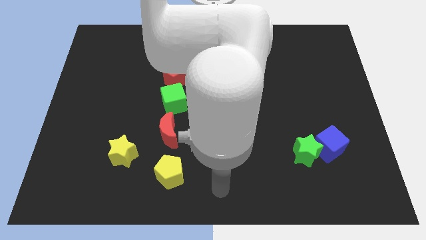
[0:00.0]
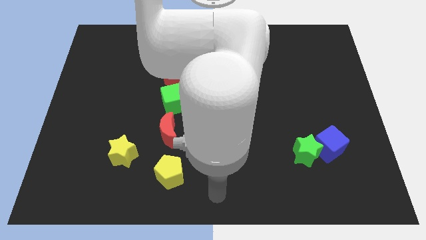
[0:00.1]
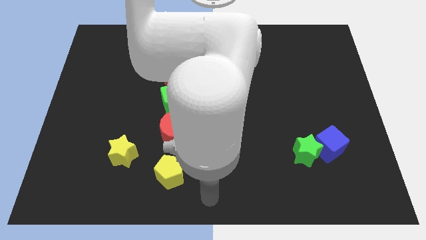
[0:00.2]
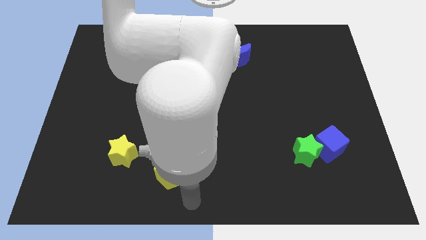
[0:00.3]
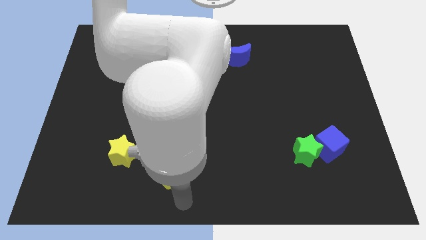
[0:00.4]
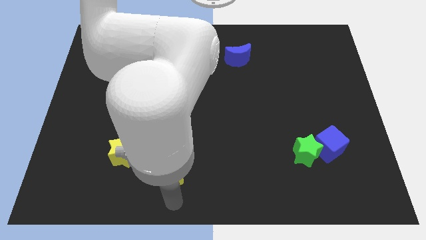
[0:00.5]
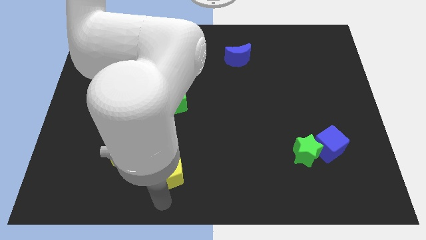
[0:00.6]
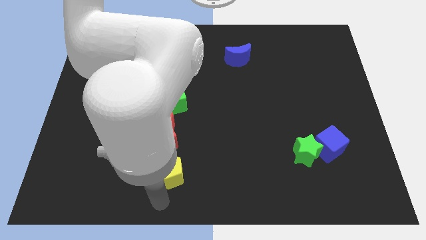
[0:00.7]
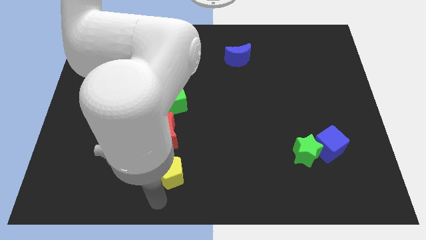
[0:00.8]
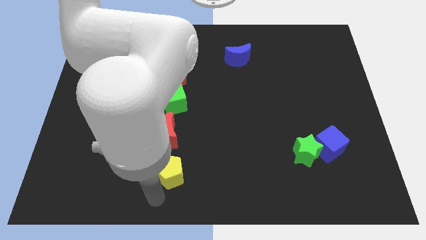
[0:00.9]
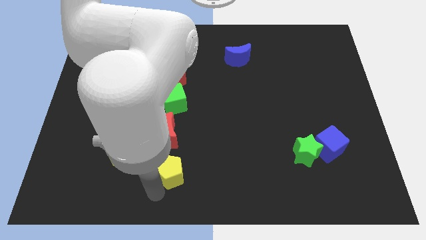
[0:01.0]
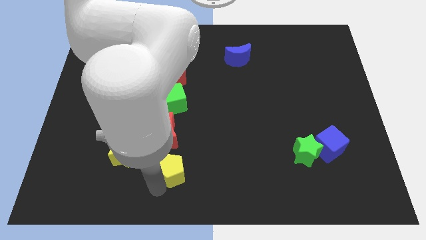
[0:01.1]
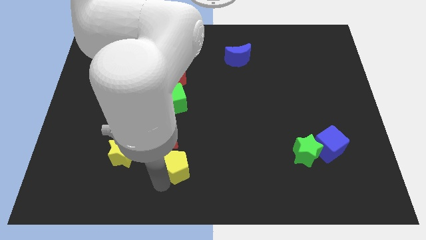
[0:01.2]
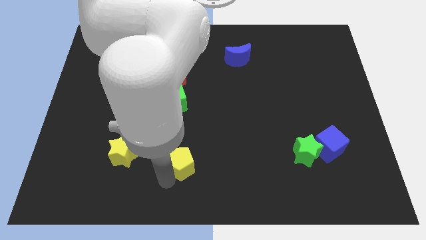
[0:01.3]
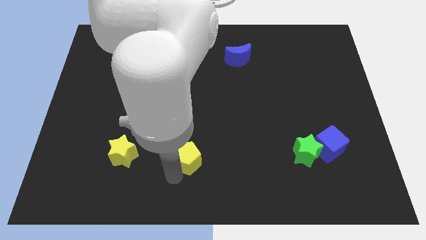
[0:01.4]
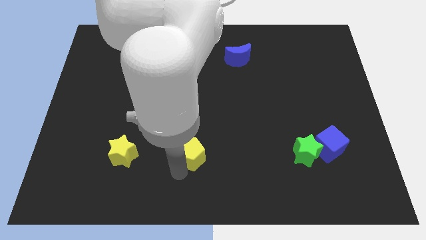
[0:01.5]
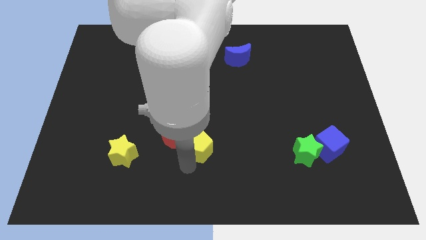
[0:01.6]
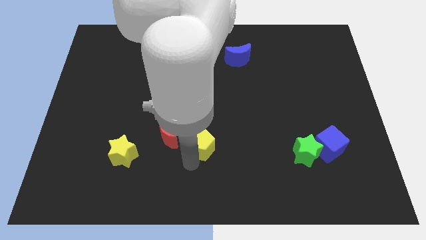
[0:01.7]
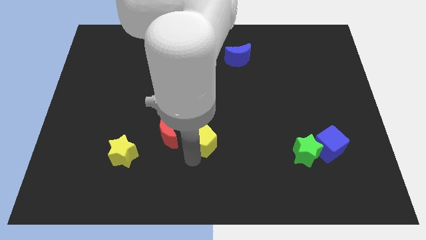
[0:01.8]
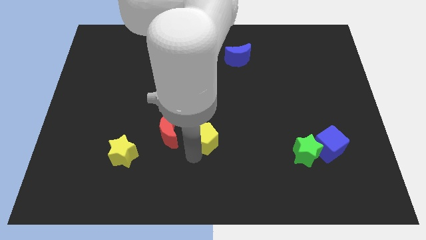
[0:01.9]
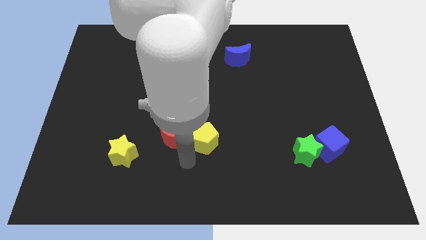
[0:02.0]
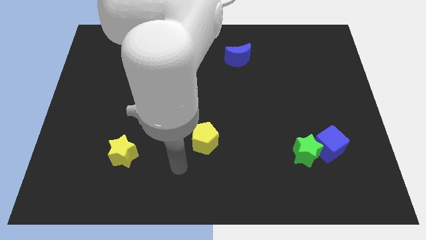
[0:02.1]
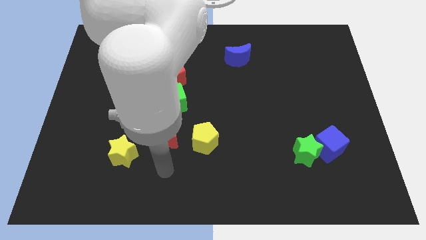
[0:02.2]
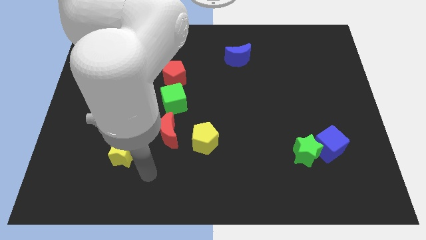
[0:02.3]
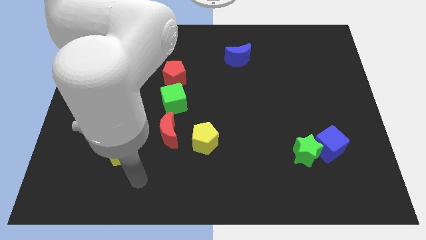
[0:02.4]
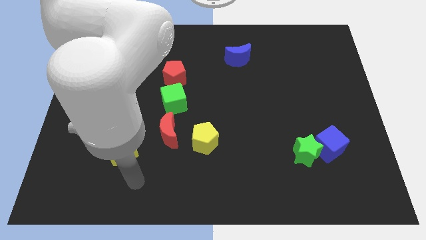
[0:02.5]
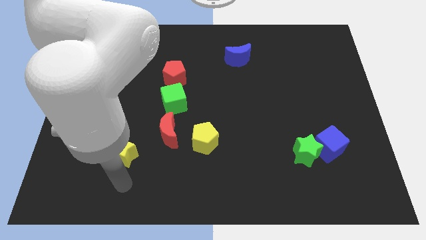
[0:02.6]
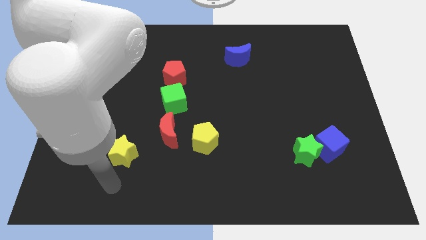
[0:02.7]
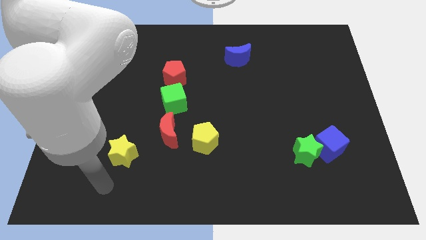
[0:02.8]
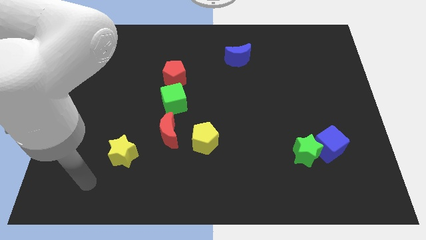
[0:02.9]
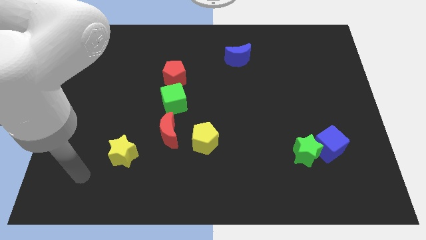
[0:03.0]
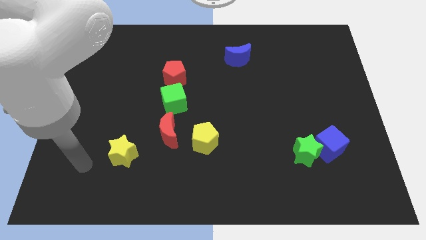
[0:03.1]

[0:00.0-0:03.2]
place the yellow pentagon to the right of the red moon

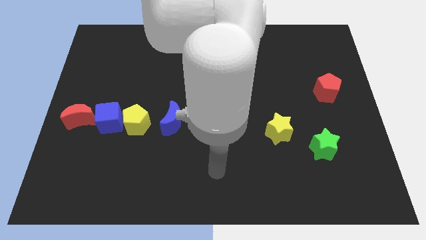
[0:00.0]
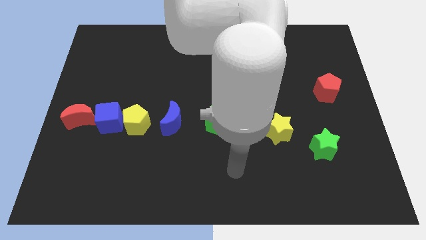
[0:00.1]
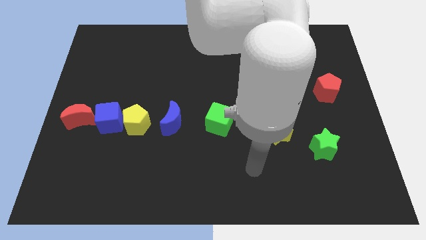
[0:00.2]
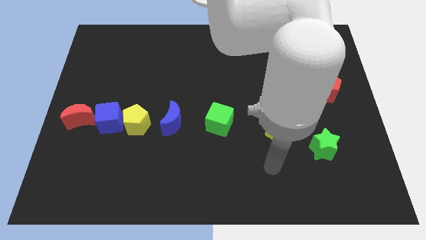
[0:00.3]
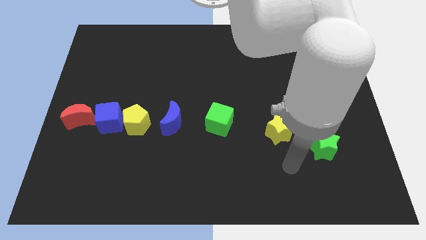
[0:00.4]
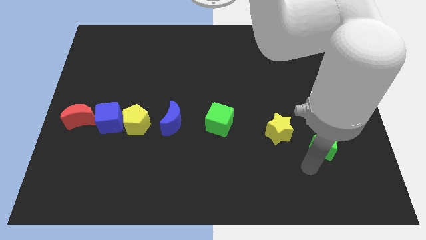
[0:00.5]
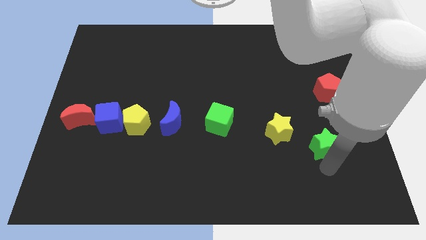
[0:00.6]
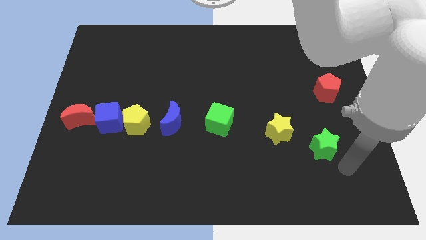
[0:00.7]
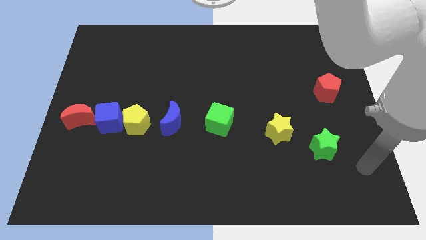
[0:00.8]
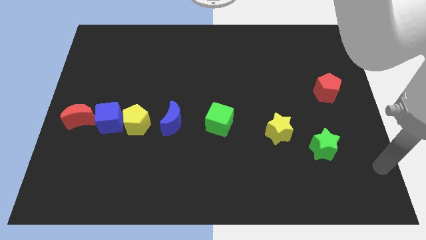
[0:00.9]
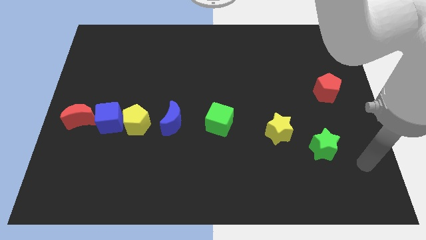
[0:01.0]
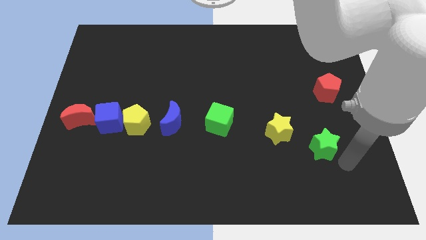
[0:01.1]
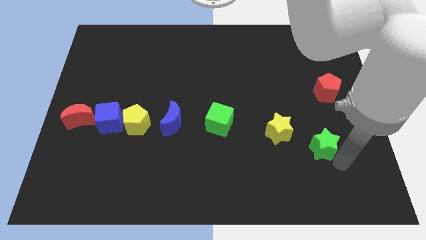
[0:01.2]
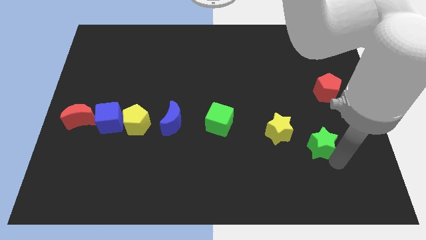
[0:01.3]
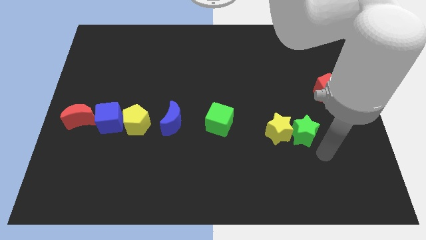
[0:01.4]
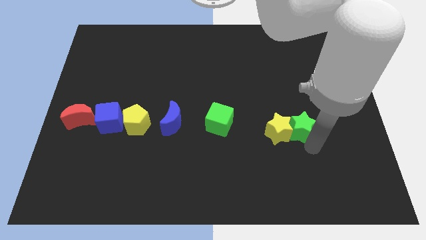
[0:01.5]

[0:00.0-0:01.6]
move the arm towards the right bottom of the green star

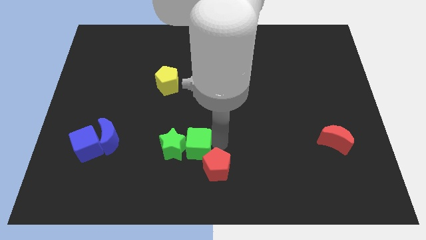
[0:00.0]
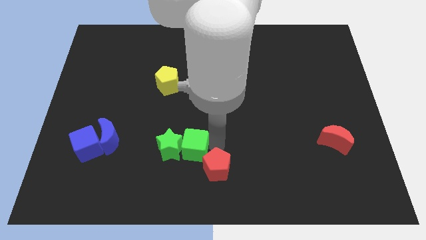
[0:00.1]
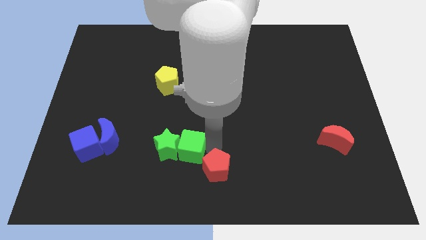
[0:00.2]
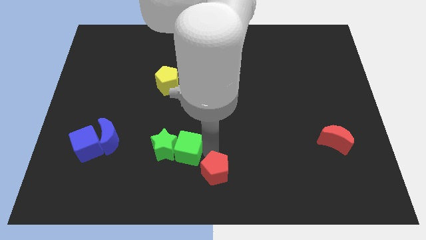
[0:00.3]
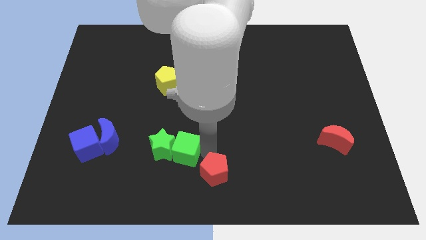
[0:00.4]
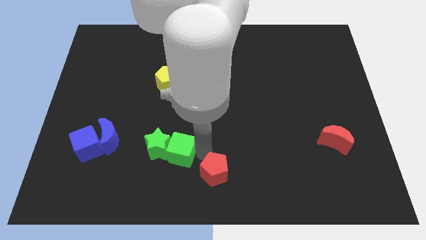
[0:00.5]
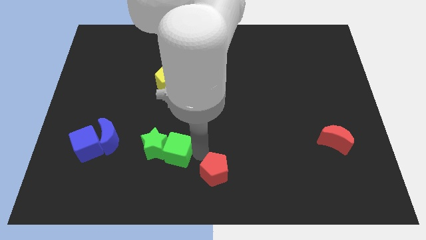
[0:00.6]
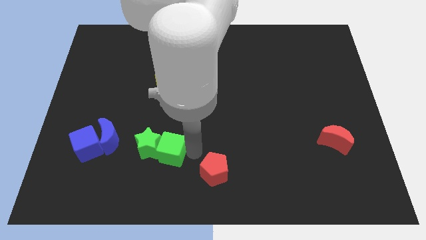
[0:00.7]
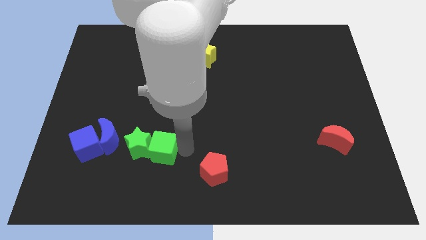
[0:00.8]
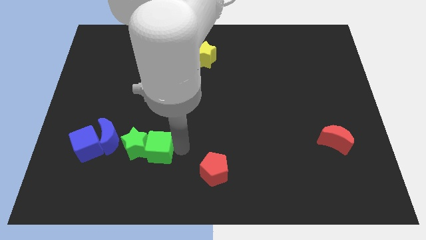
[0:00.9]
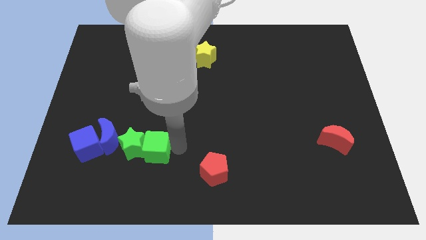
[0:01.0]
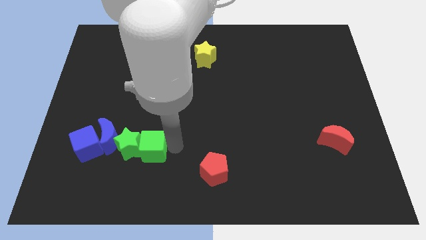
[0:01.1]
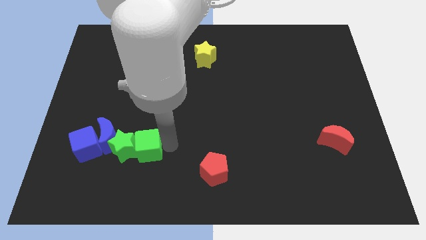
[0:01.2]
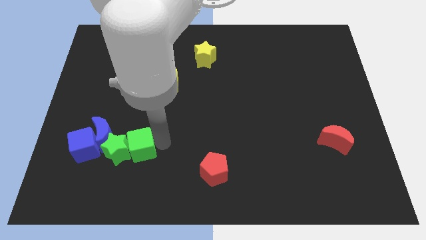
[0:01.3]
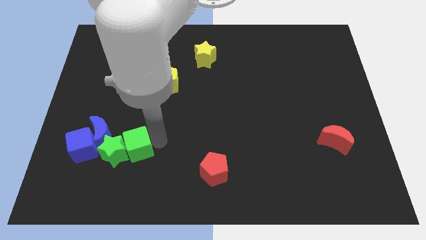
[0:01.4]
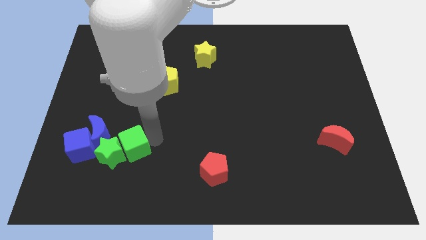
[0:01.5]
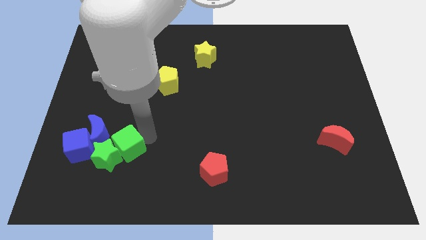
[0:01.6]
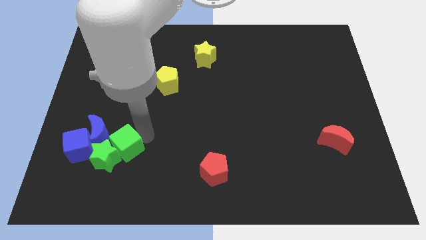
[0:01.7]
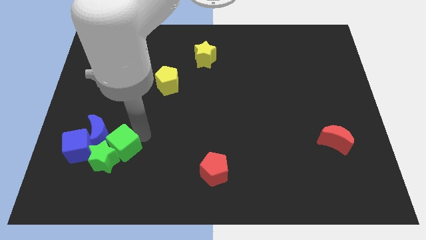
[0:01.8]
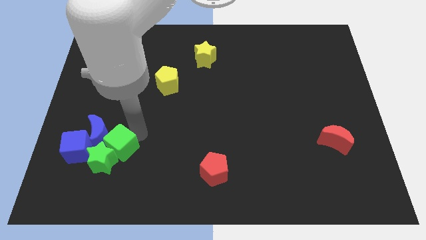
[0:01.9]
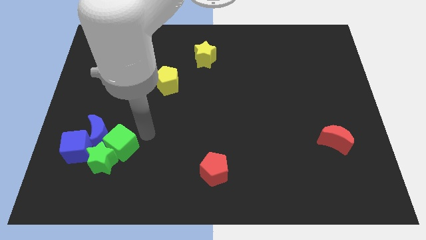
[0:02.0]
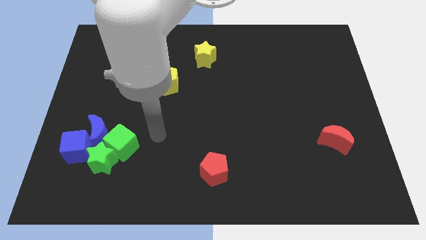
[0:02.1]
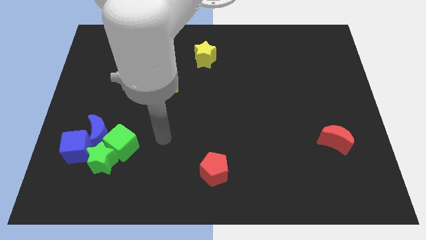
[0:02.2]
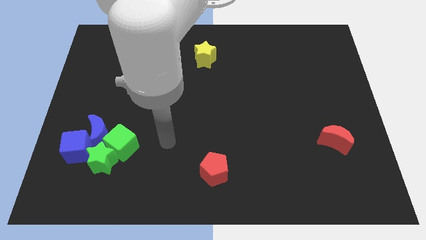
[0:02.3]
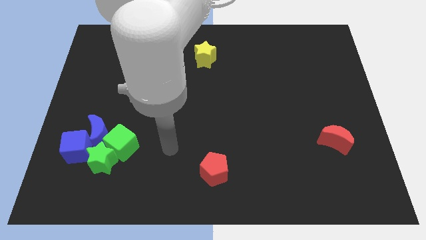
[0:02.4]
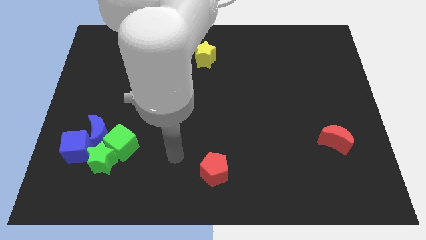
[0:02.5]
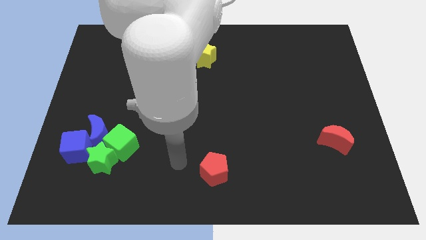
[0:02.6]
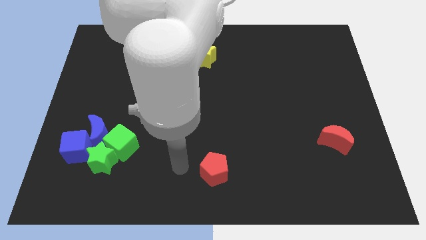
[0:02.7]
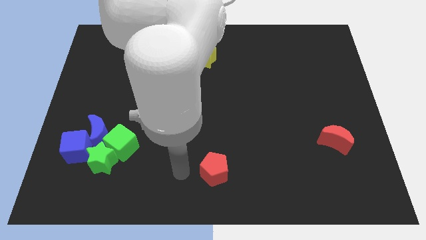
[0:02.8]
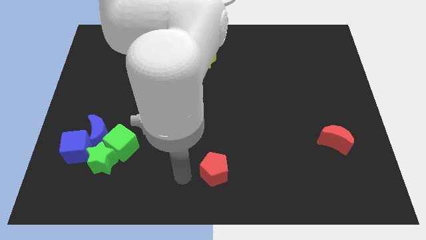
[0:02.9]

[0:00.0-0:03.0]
move the green cube towards the left side slightly

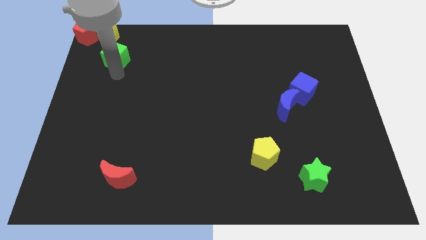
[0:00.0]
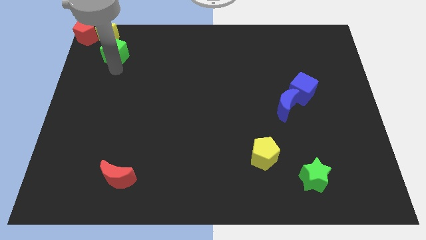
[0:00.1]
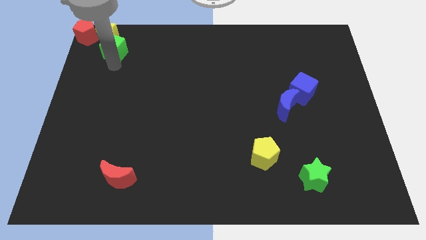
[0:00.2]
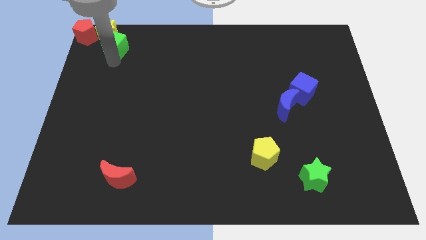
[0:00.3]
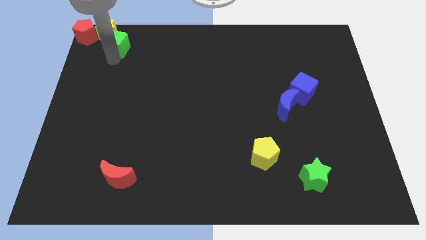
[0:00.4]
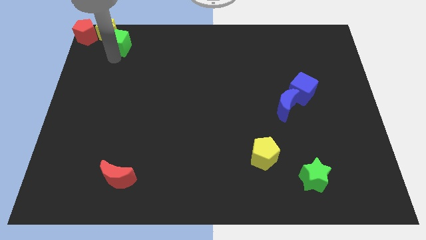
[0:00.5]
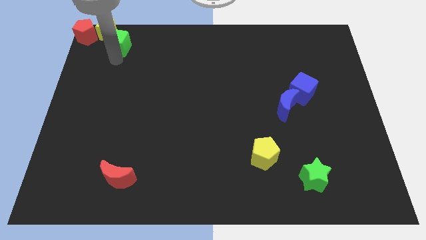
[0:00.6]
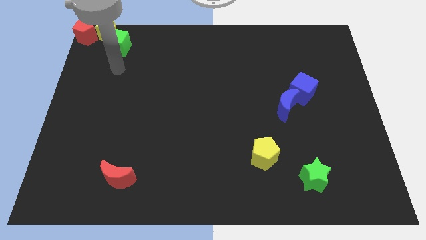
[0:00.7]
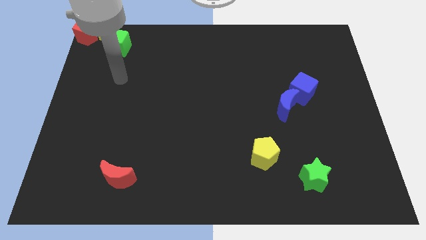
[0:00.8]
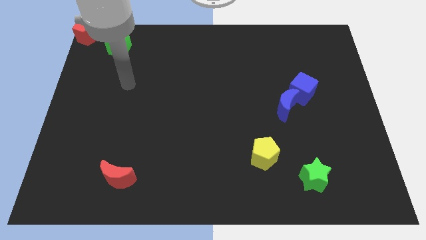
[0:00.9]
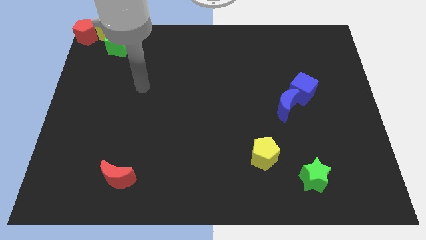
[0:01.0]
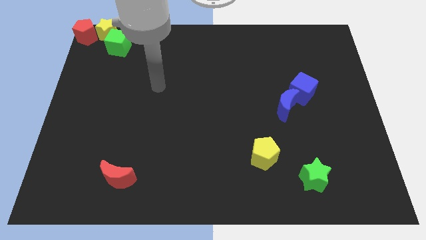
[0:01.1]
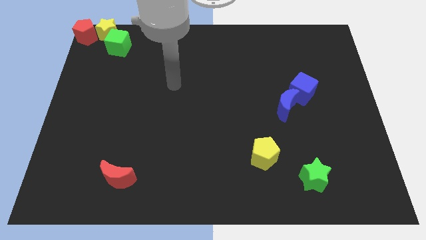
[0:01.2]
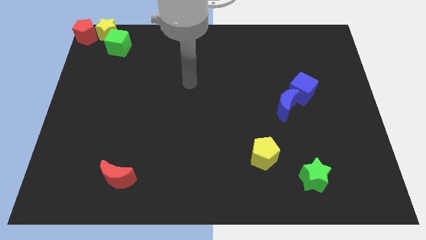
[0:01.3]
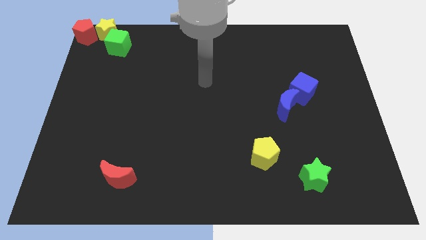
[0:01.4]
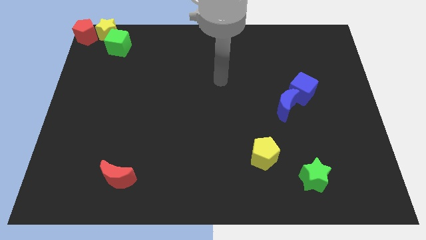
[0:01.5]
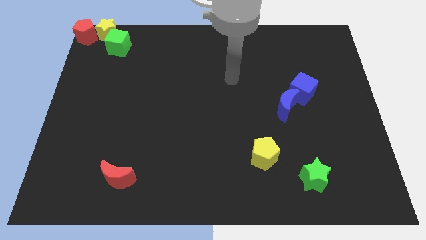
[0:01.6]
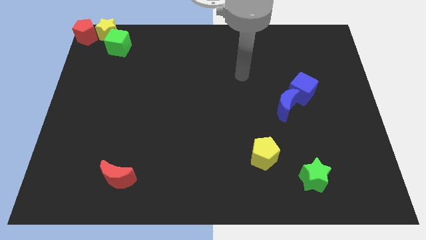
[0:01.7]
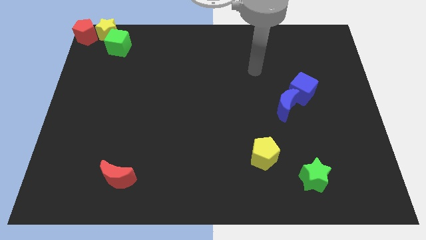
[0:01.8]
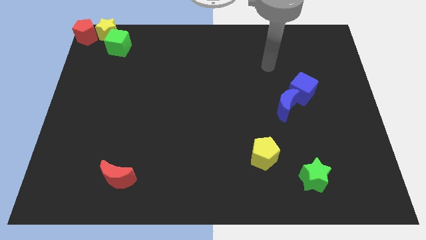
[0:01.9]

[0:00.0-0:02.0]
move the green cube into the yellow star
